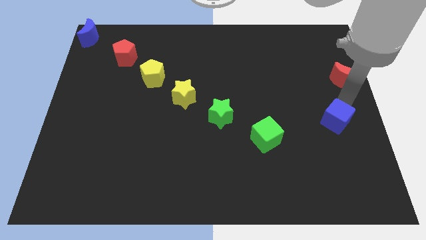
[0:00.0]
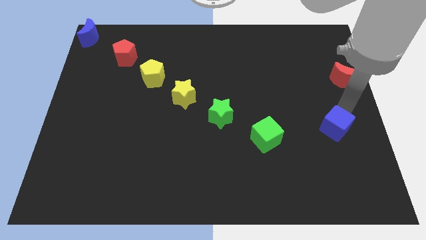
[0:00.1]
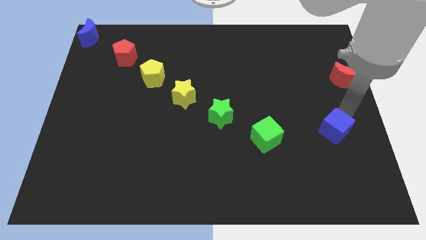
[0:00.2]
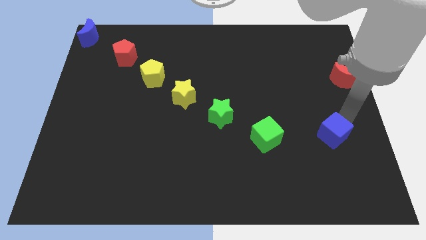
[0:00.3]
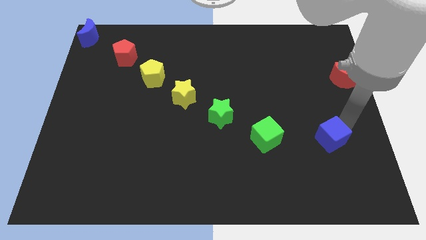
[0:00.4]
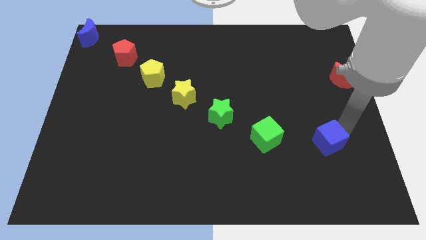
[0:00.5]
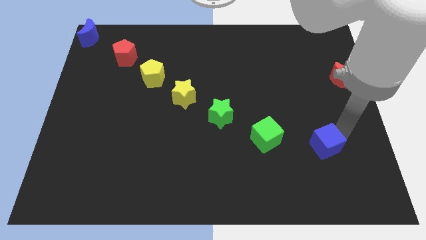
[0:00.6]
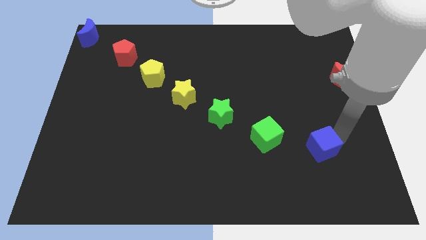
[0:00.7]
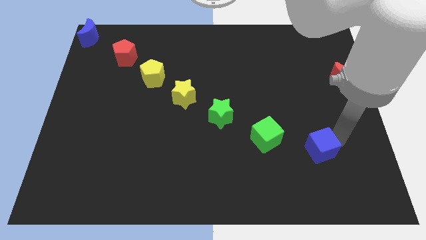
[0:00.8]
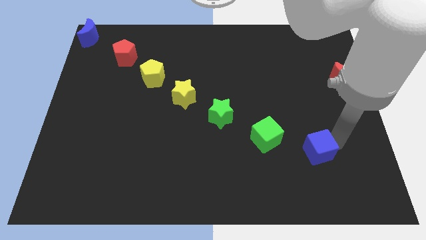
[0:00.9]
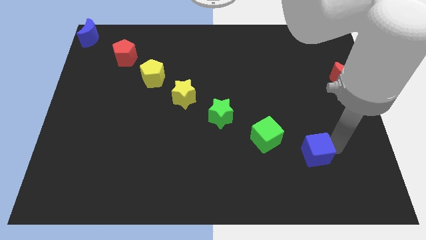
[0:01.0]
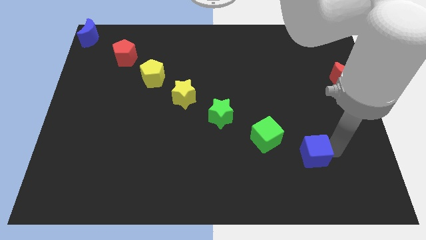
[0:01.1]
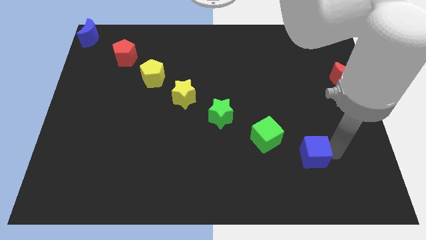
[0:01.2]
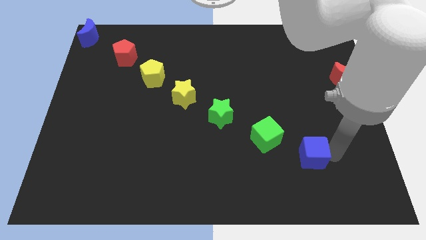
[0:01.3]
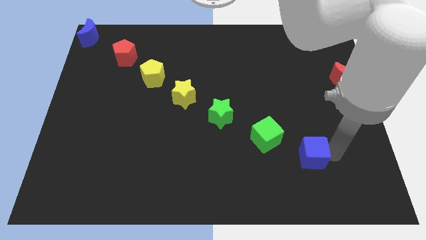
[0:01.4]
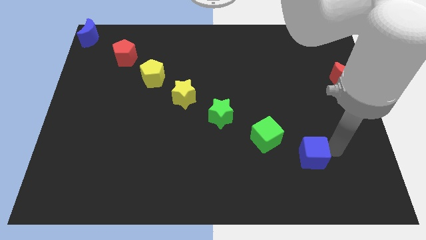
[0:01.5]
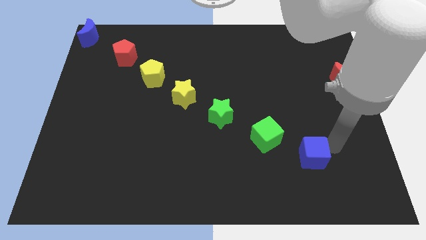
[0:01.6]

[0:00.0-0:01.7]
move the blue cube parallel to the green cube

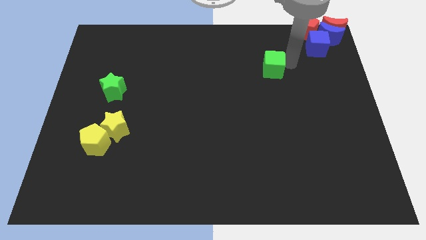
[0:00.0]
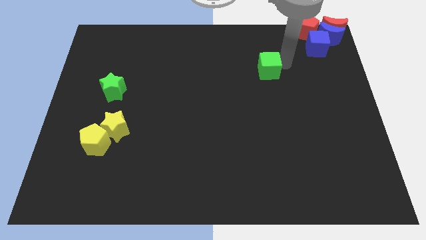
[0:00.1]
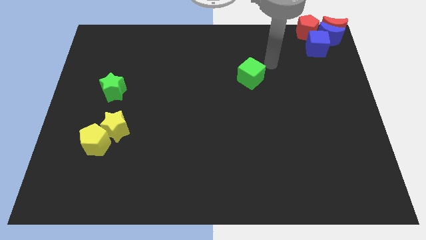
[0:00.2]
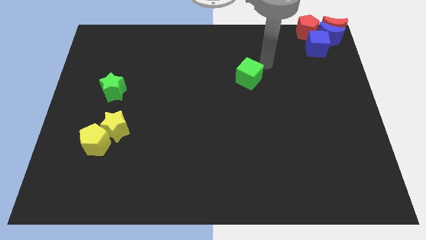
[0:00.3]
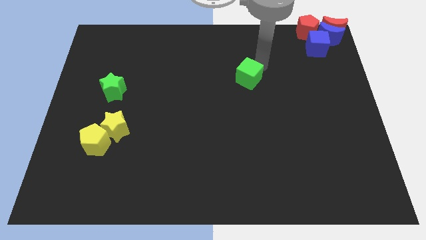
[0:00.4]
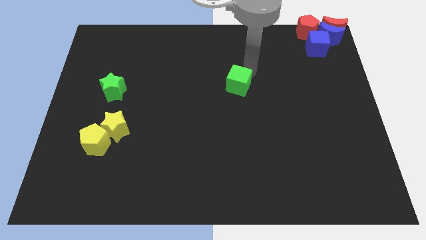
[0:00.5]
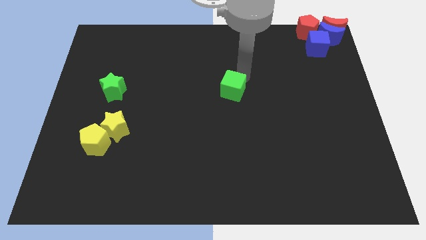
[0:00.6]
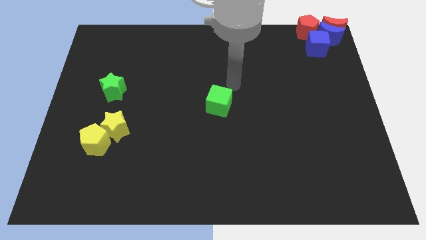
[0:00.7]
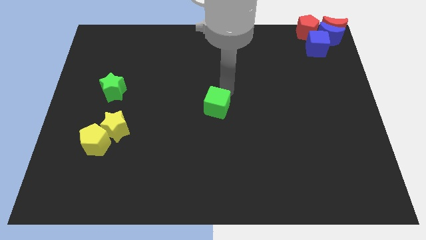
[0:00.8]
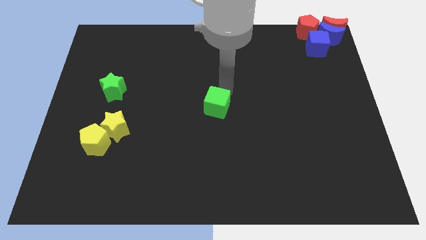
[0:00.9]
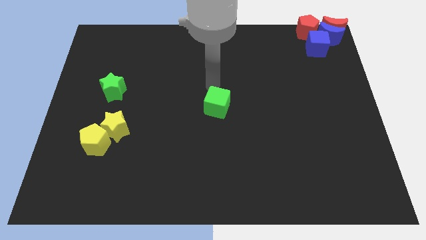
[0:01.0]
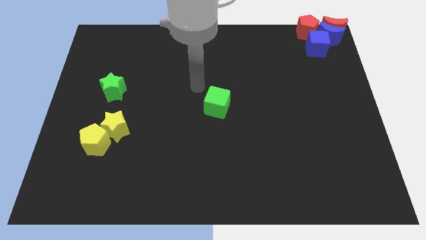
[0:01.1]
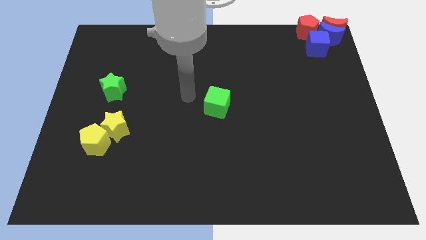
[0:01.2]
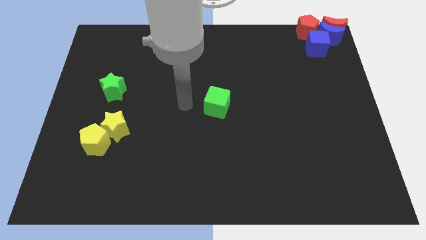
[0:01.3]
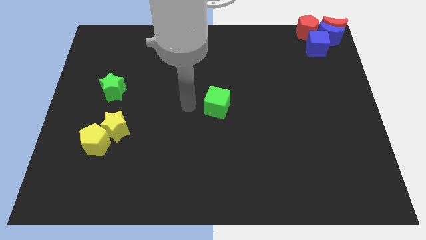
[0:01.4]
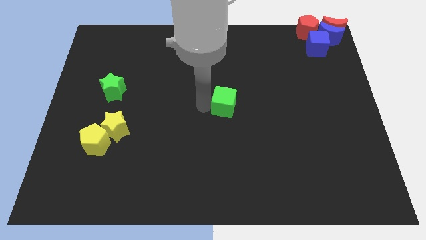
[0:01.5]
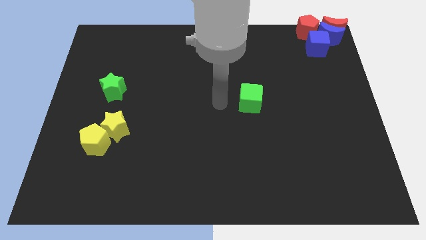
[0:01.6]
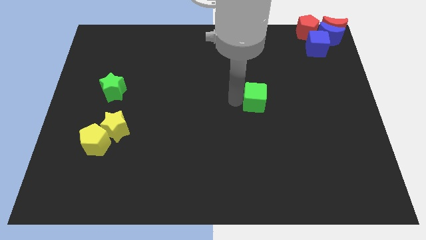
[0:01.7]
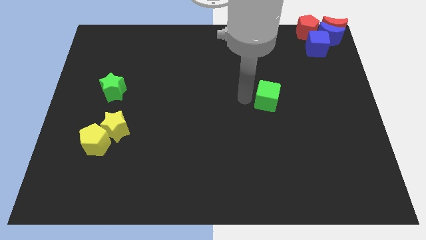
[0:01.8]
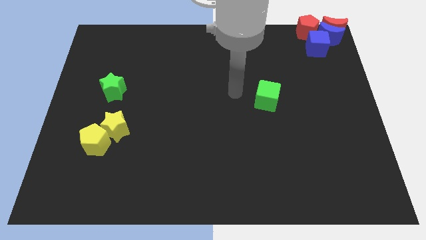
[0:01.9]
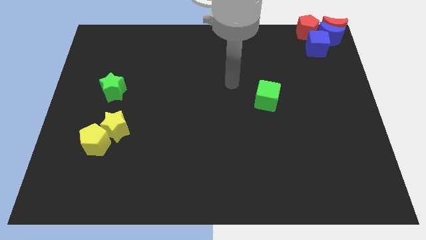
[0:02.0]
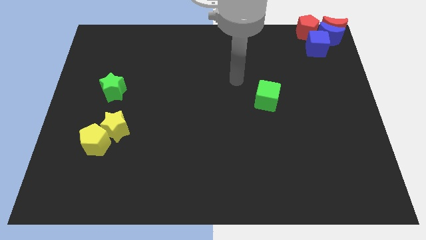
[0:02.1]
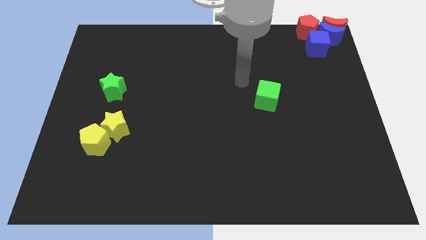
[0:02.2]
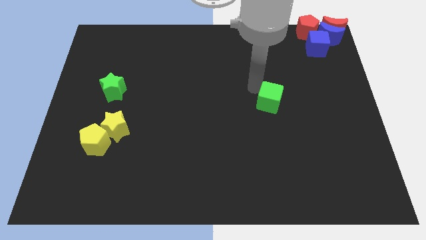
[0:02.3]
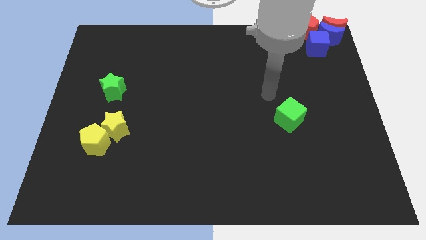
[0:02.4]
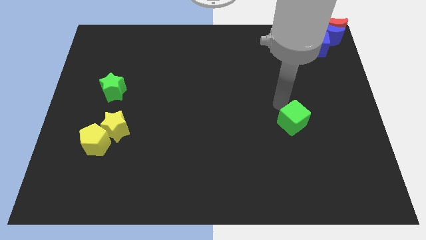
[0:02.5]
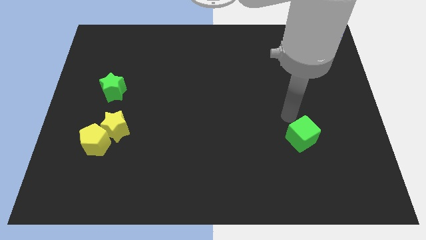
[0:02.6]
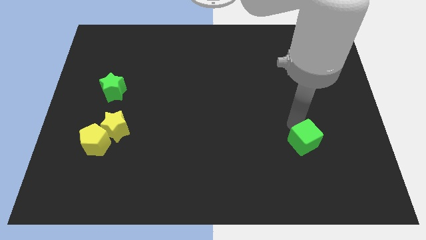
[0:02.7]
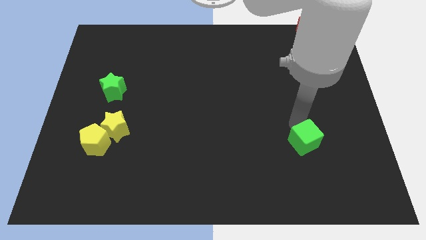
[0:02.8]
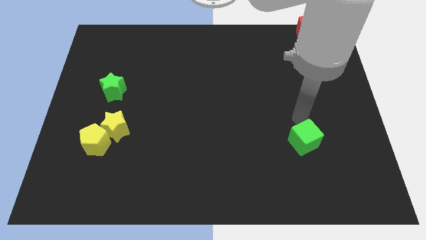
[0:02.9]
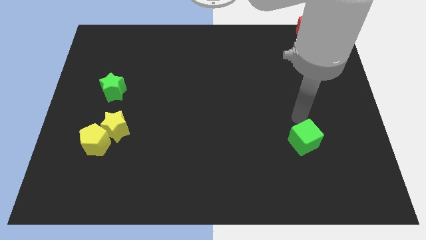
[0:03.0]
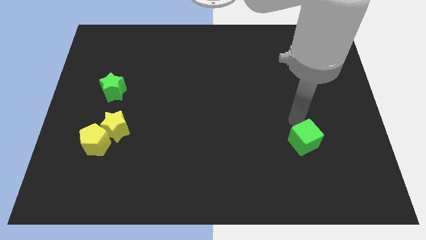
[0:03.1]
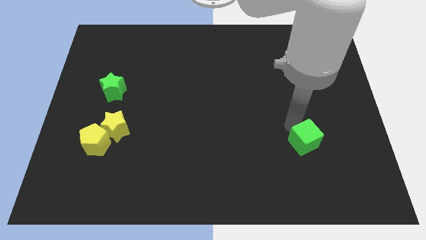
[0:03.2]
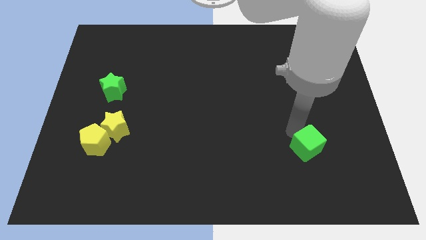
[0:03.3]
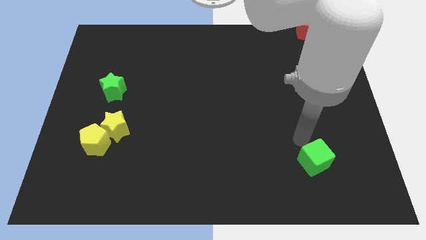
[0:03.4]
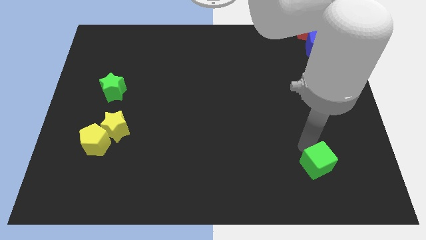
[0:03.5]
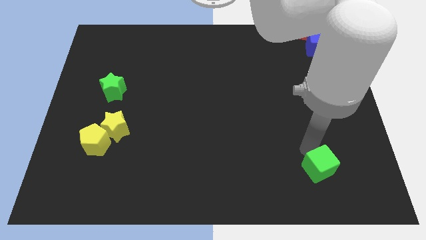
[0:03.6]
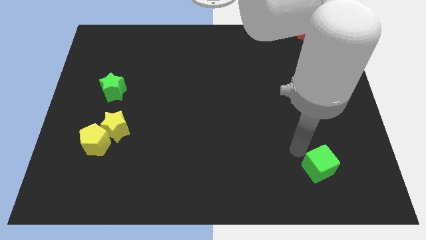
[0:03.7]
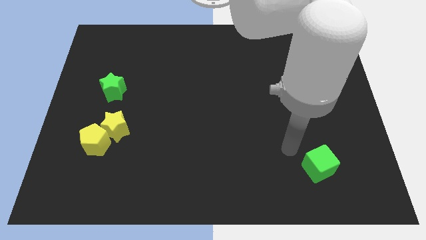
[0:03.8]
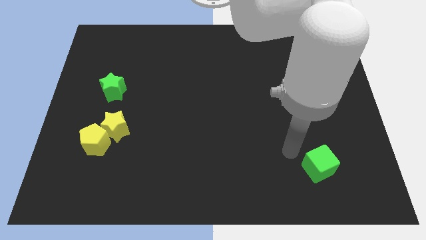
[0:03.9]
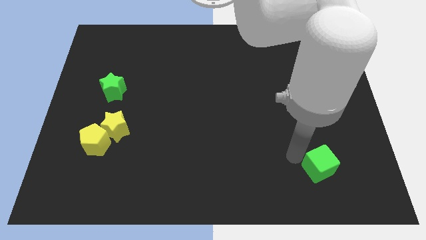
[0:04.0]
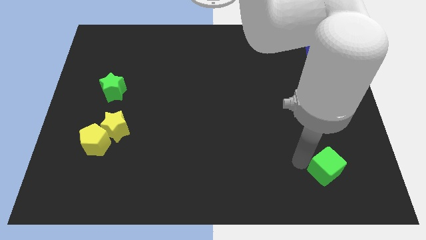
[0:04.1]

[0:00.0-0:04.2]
push the green cube bottom right corner of the board

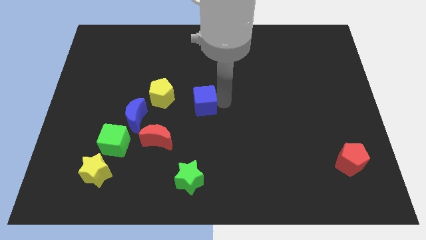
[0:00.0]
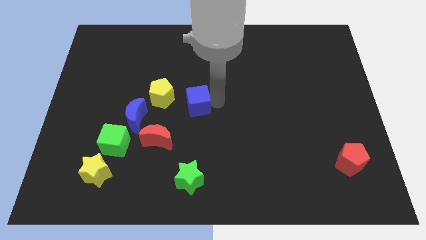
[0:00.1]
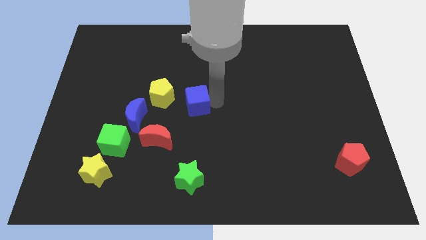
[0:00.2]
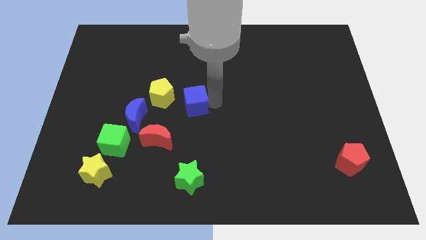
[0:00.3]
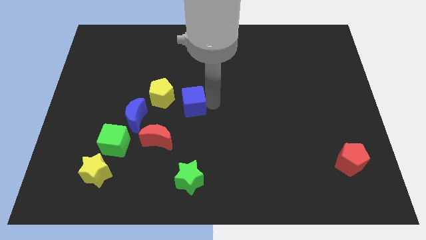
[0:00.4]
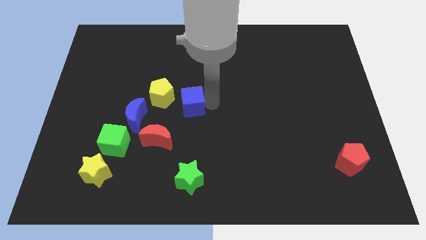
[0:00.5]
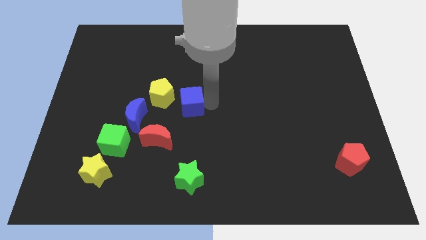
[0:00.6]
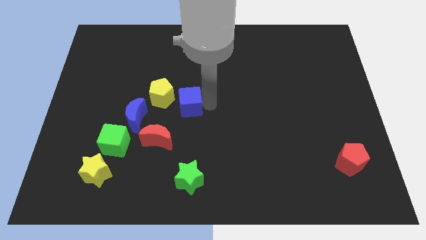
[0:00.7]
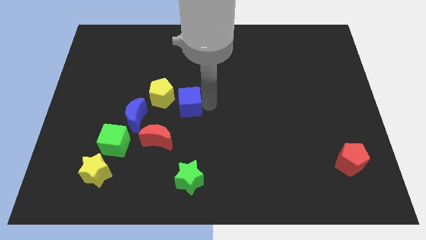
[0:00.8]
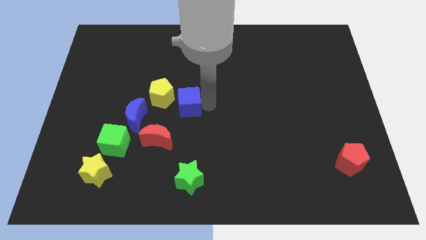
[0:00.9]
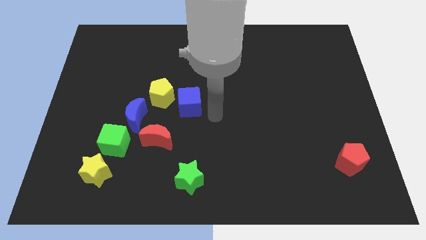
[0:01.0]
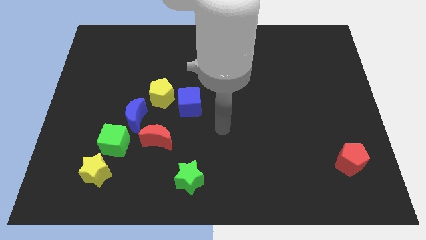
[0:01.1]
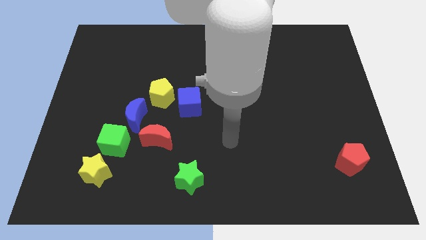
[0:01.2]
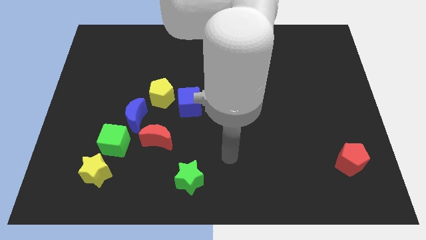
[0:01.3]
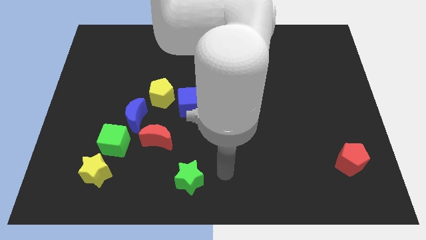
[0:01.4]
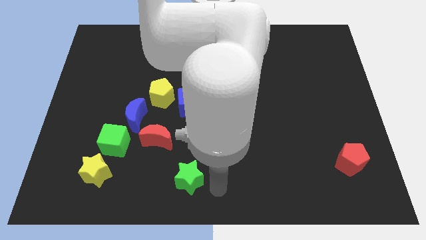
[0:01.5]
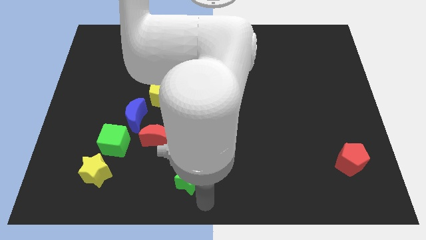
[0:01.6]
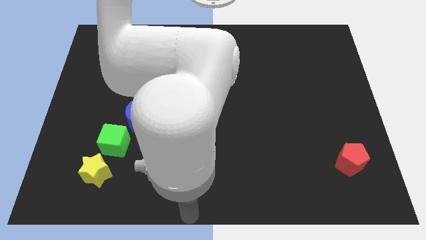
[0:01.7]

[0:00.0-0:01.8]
push the blue cube to the right of the yellow pentagon

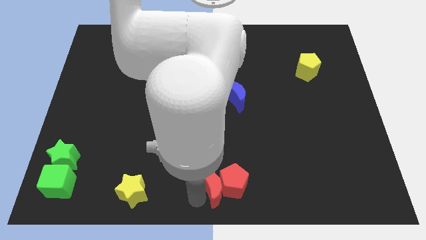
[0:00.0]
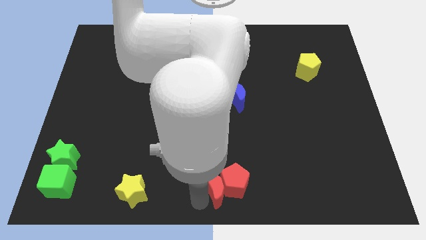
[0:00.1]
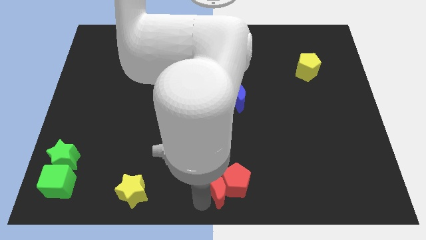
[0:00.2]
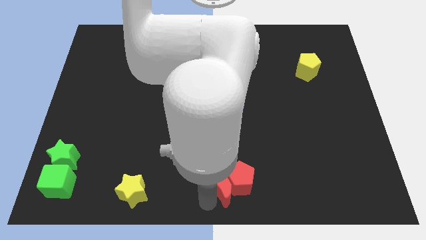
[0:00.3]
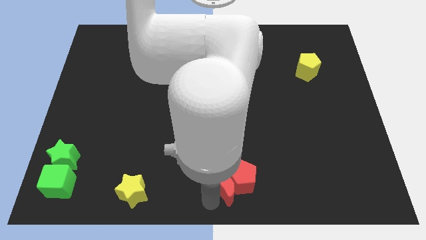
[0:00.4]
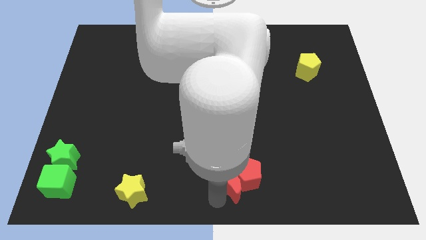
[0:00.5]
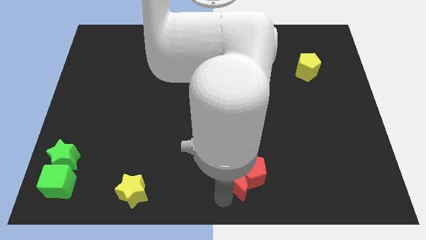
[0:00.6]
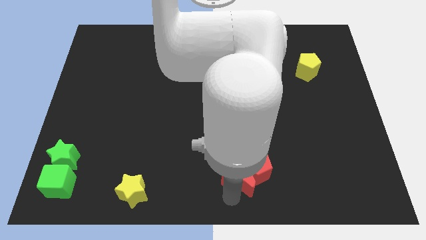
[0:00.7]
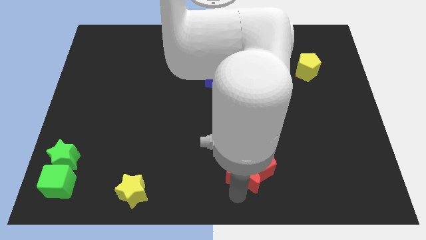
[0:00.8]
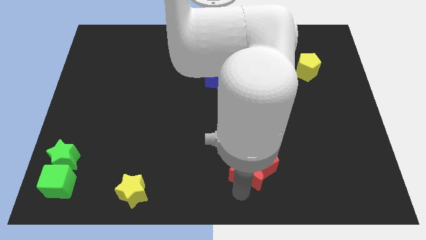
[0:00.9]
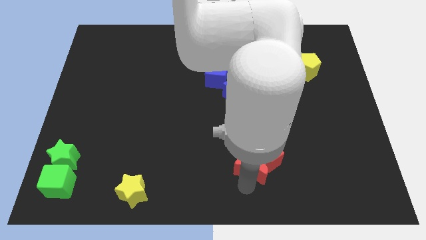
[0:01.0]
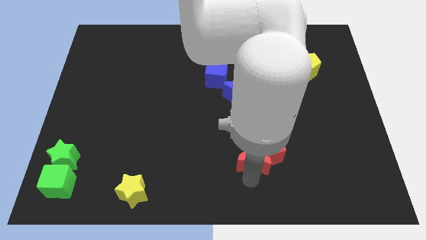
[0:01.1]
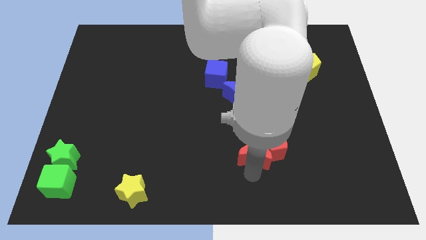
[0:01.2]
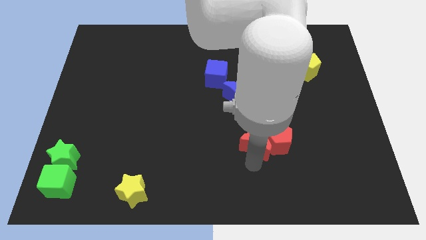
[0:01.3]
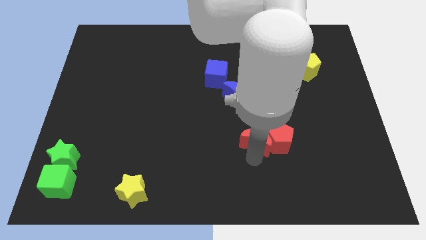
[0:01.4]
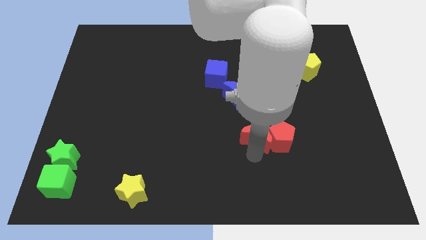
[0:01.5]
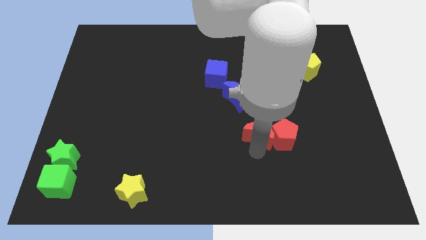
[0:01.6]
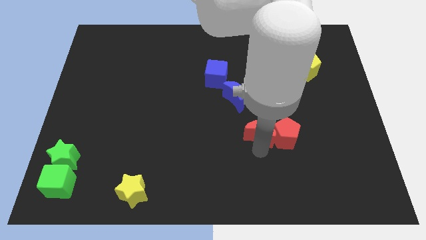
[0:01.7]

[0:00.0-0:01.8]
move the red blocks towards top
